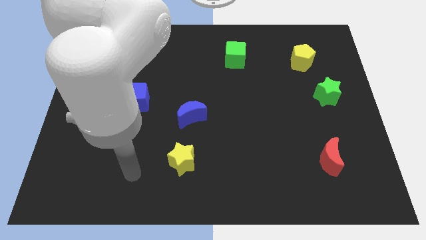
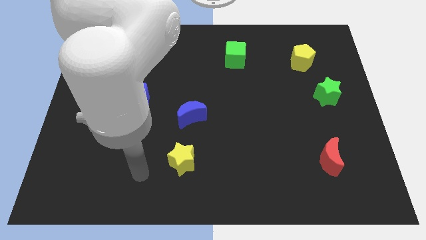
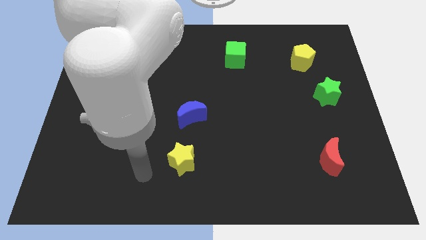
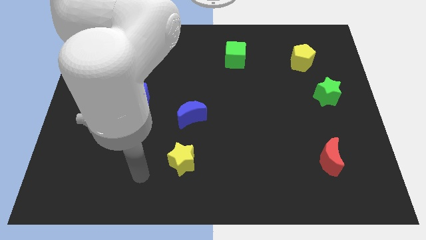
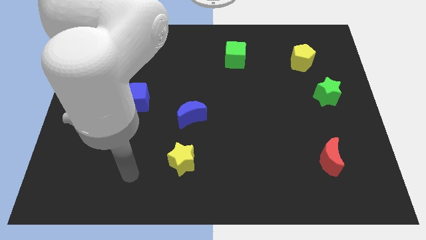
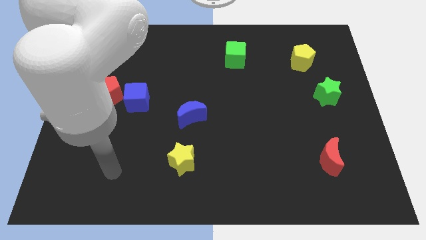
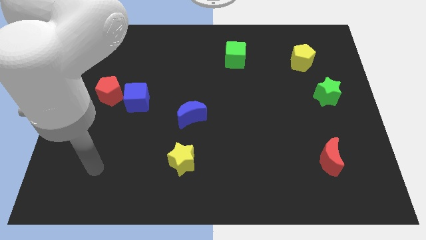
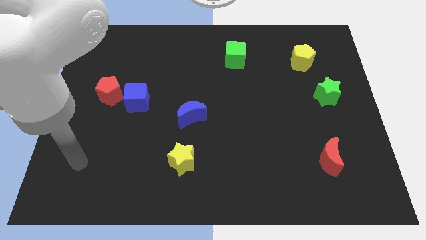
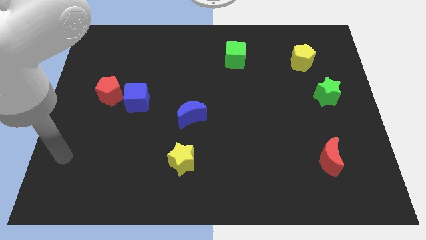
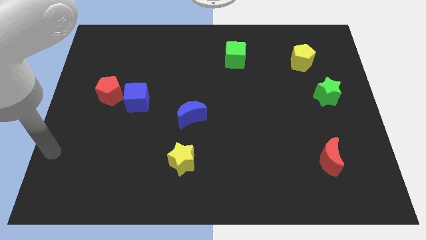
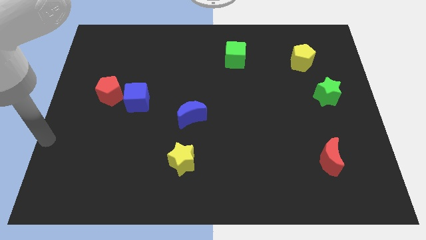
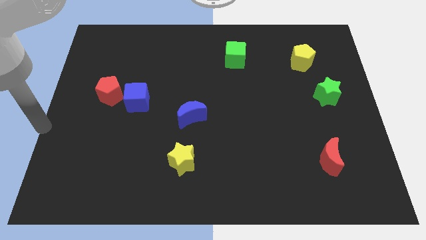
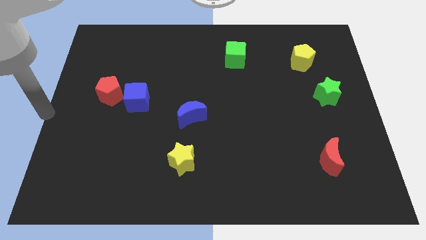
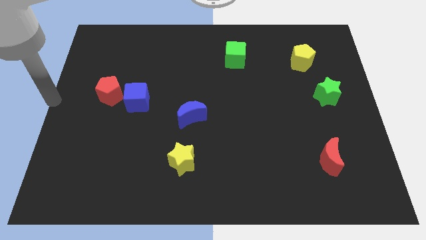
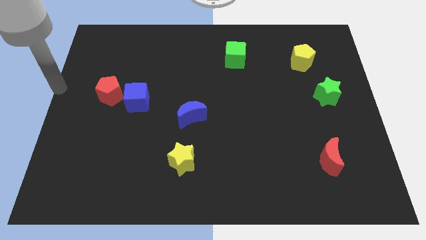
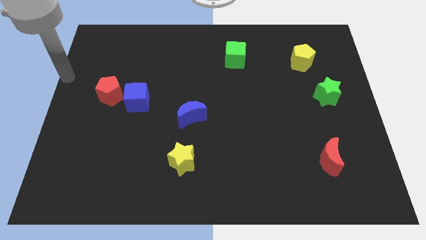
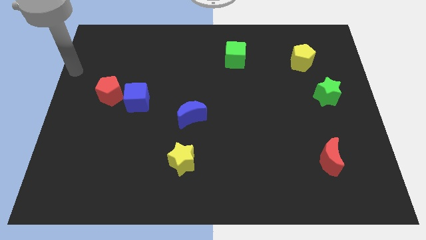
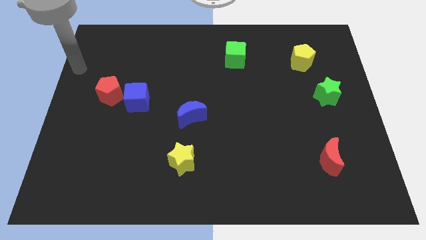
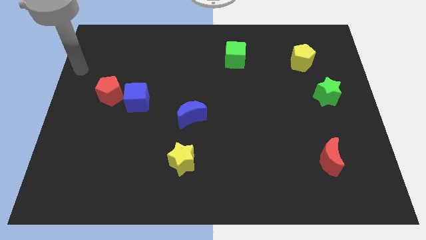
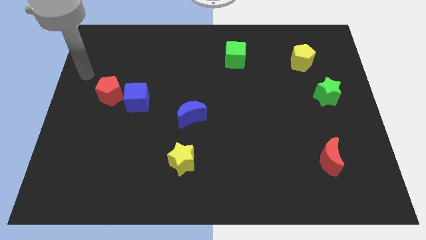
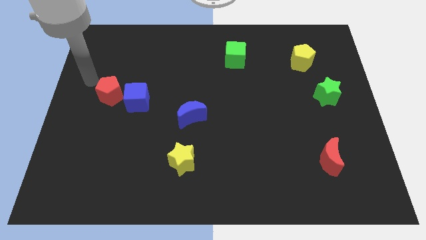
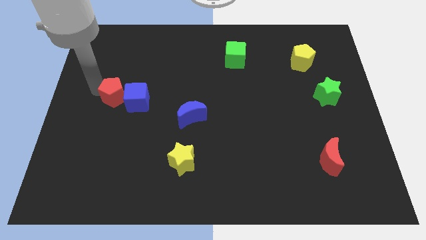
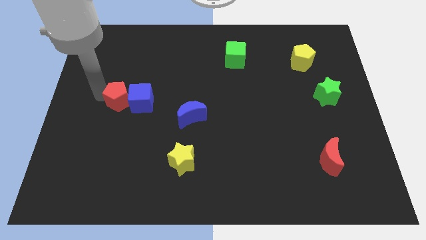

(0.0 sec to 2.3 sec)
slightly push red pentagon into the left of blue cube

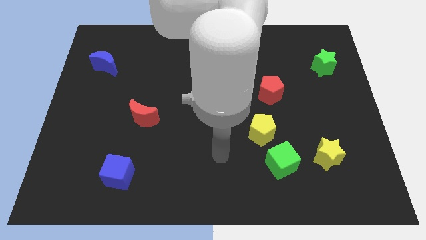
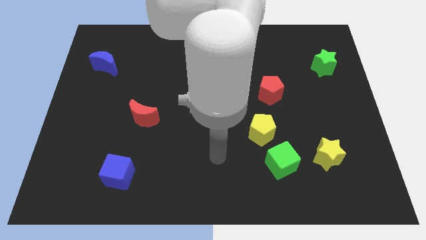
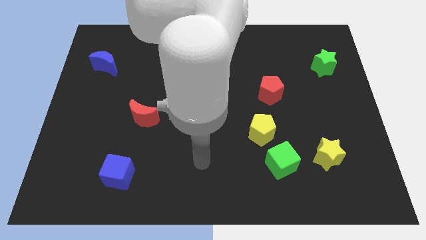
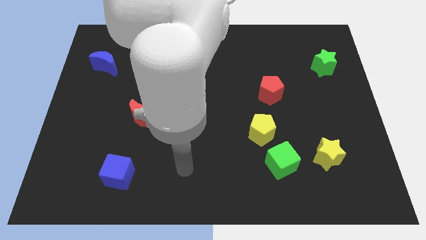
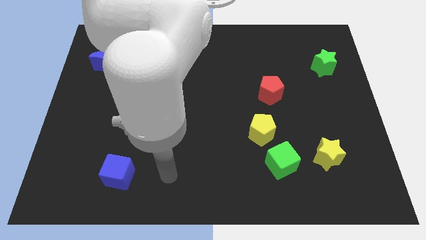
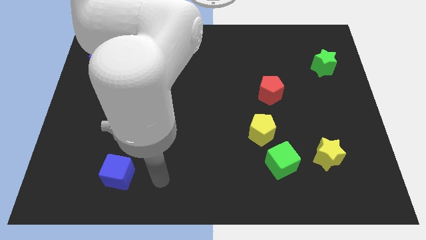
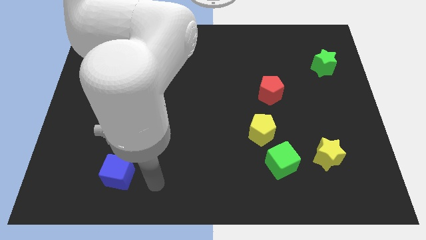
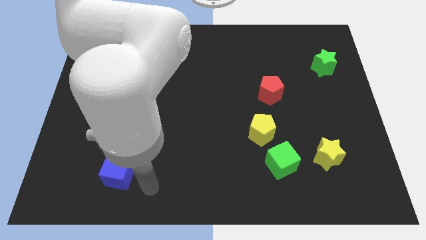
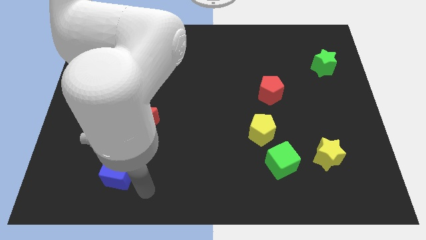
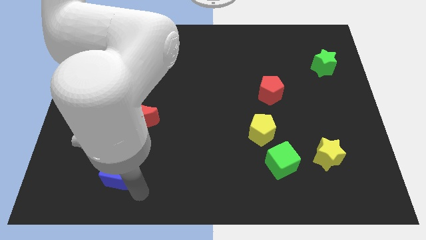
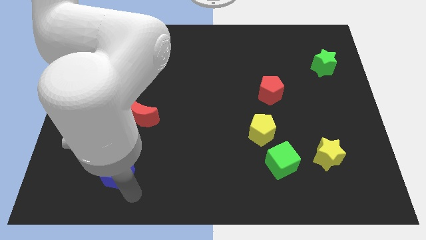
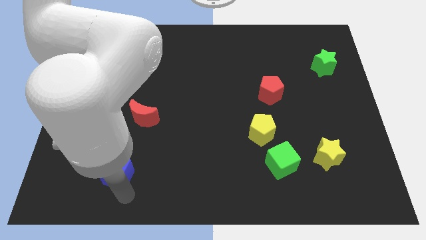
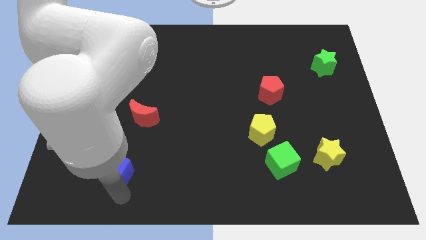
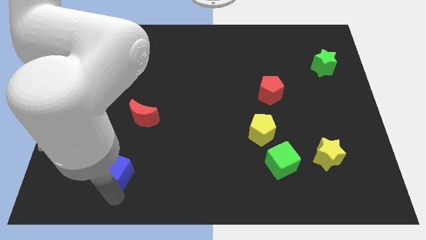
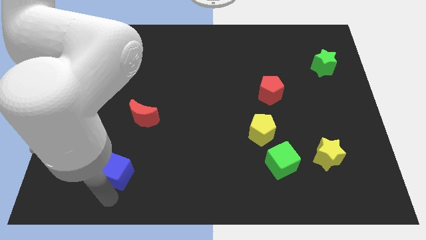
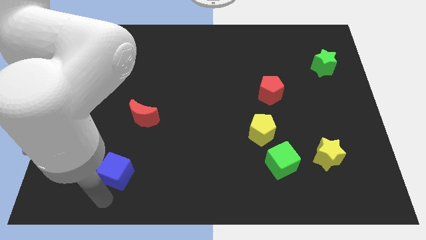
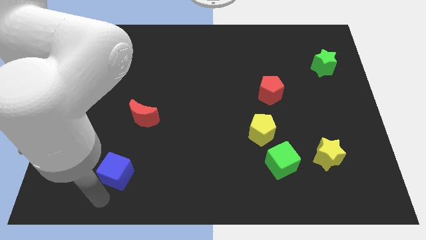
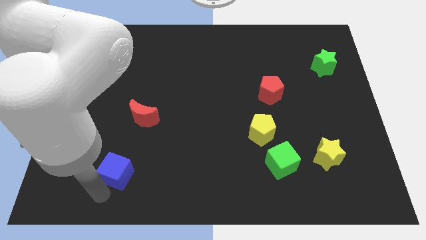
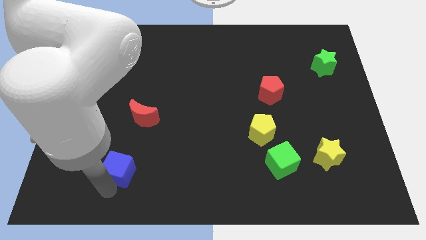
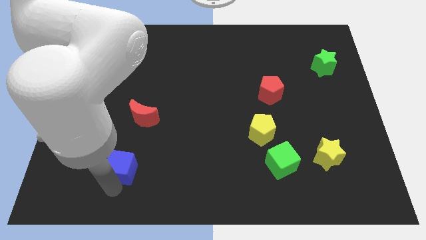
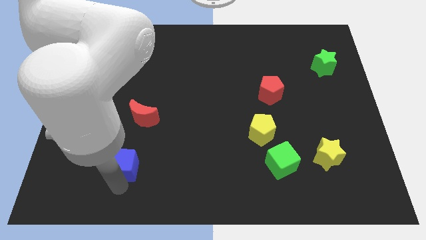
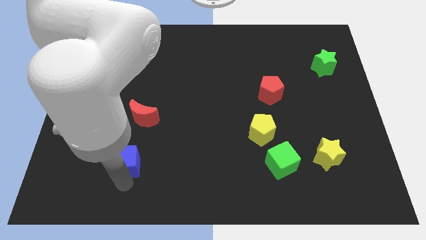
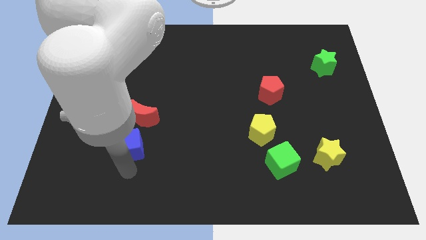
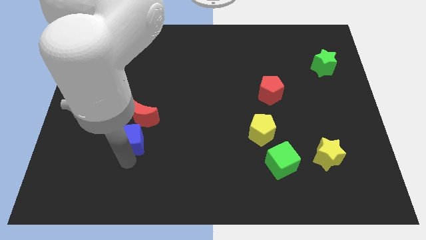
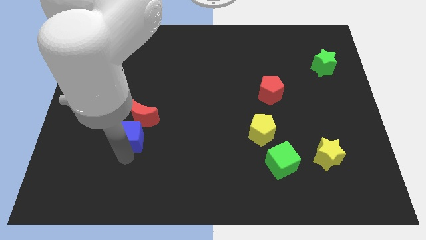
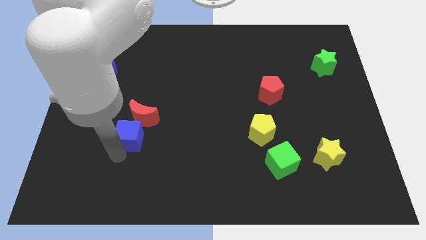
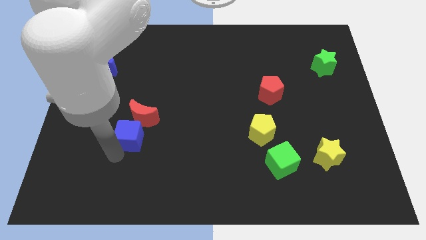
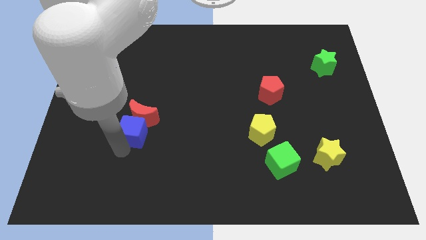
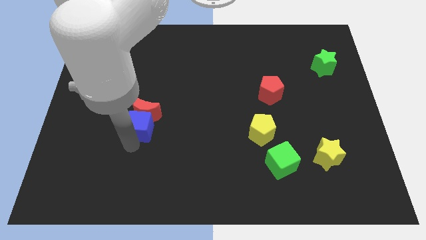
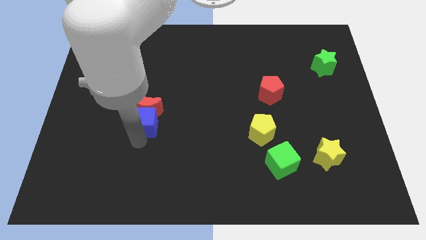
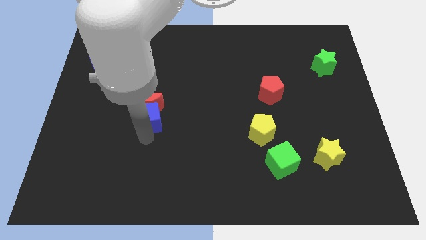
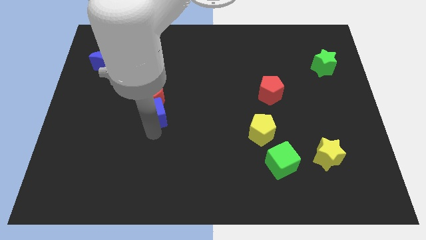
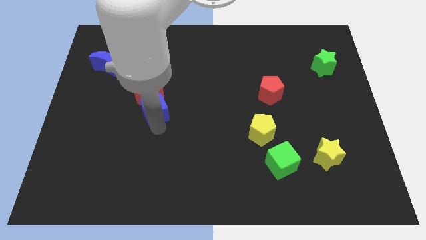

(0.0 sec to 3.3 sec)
move the blue cube into the red crescent

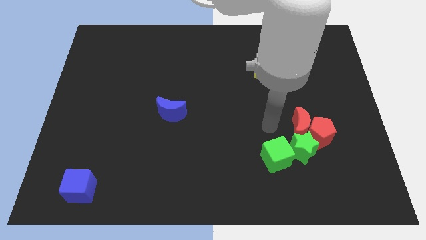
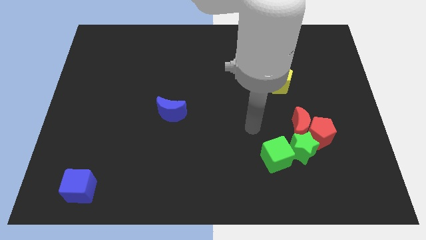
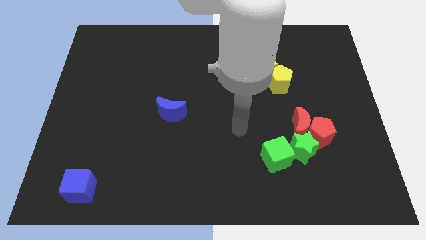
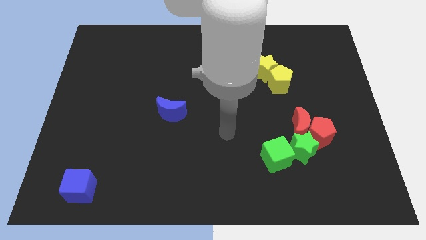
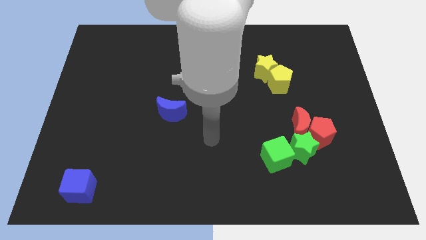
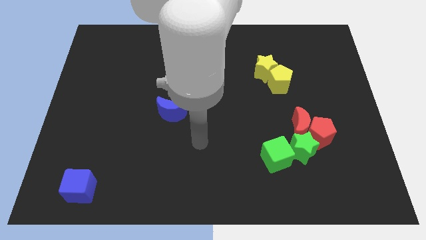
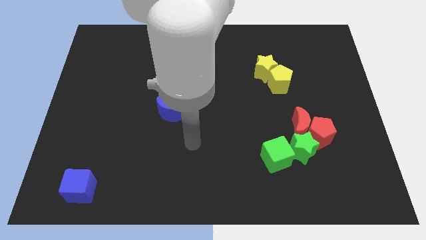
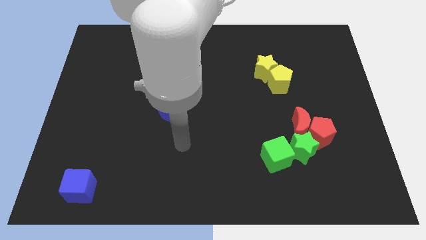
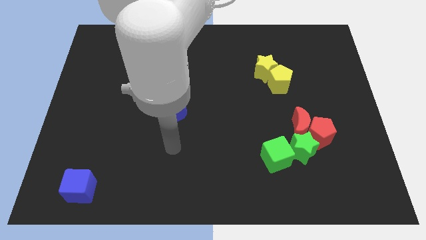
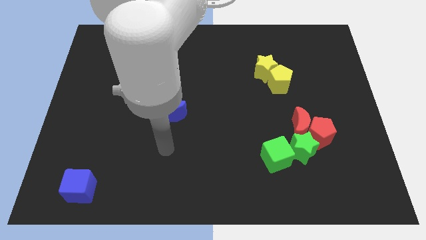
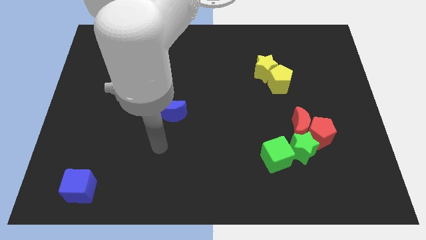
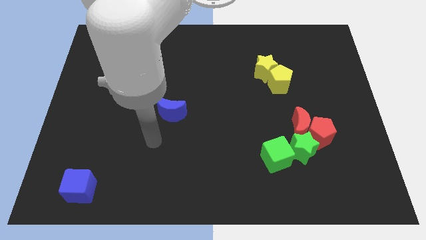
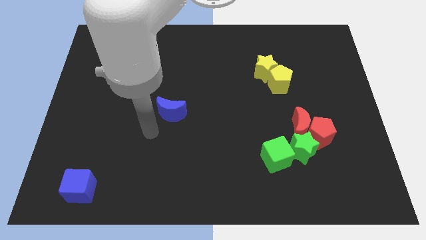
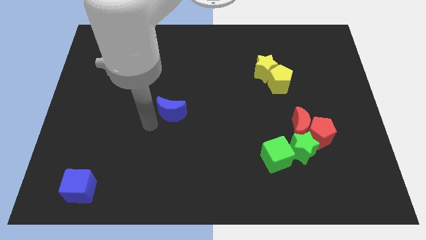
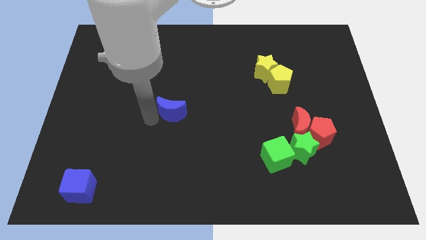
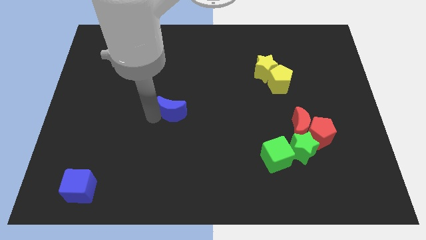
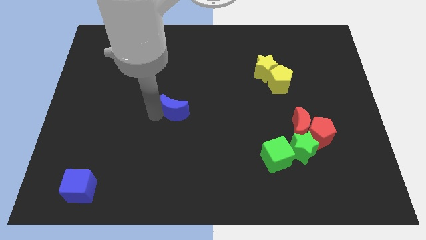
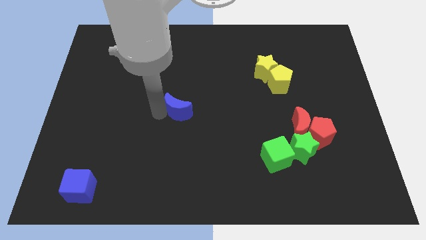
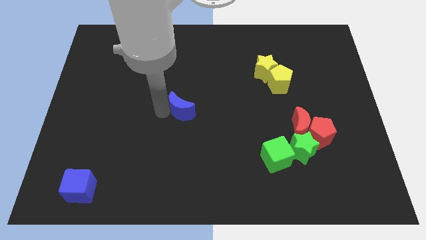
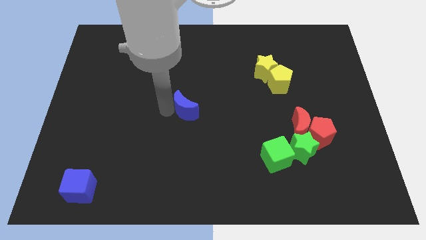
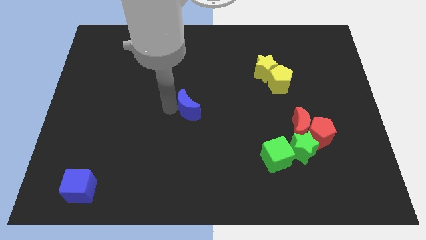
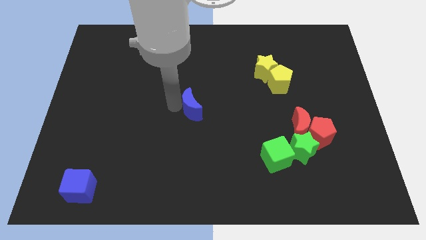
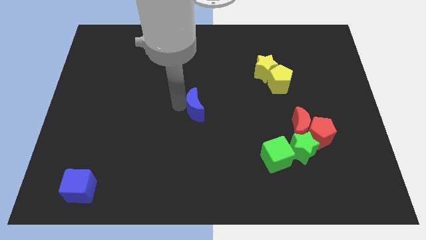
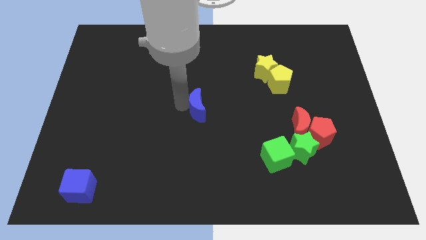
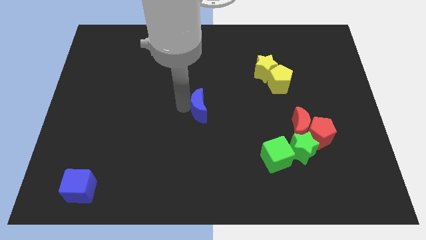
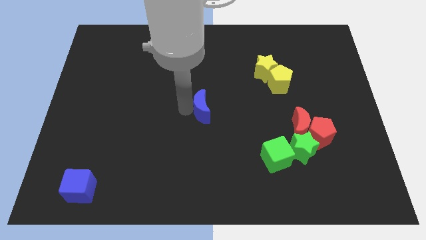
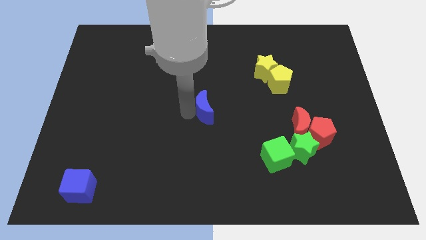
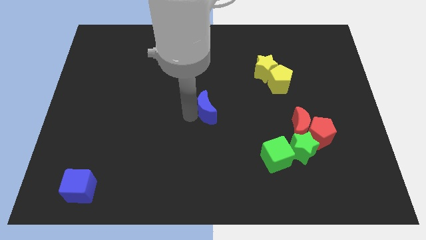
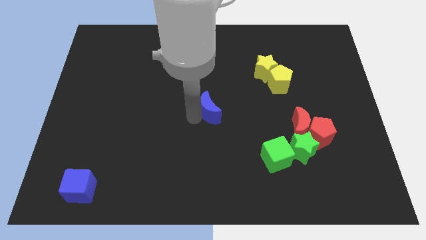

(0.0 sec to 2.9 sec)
move the blue moon to the center

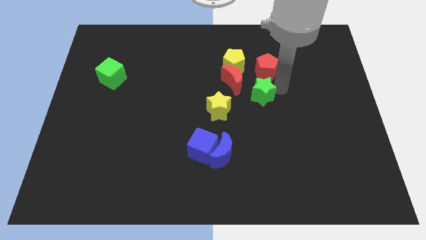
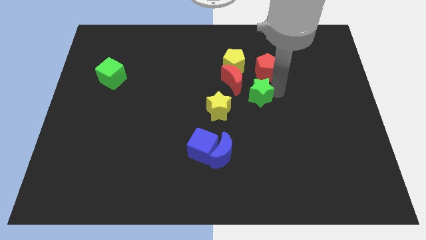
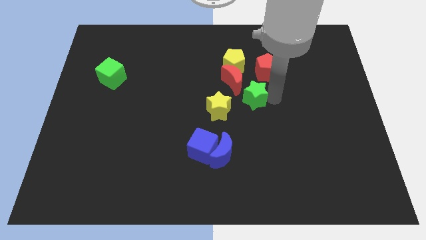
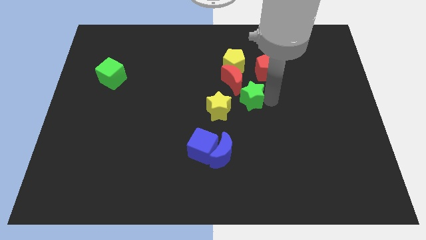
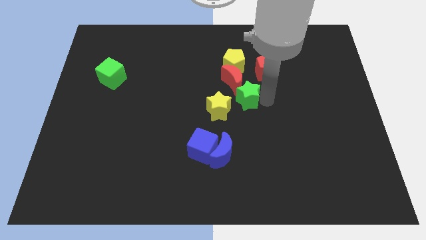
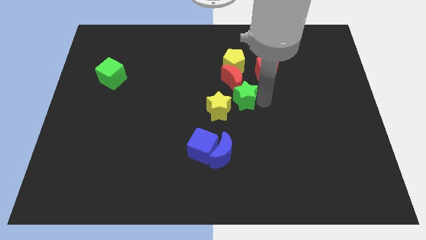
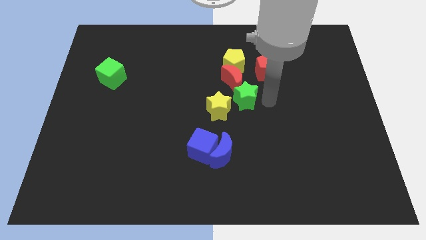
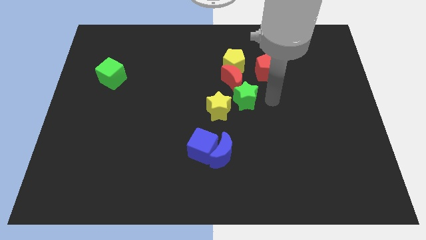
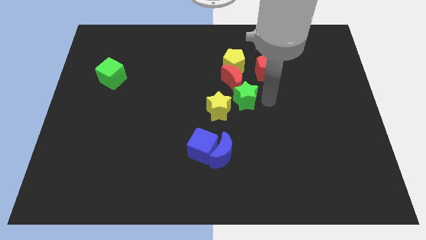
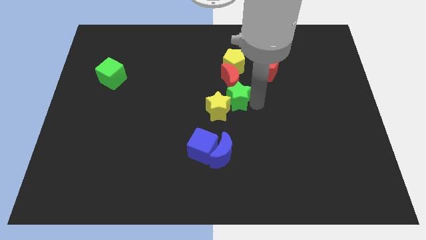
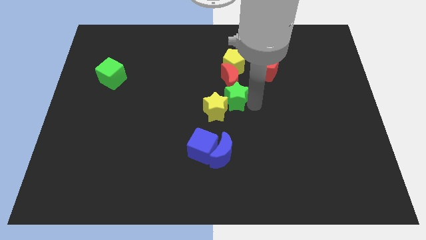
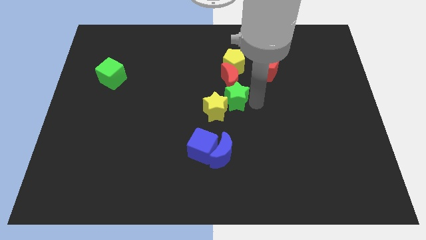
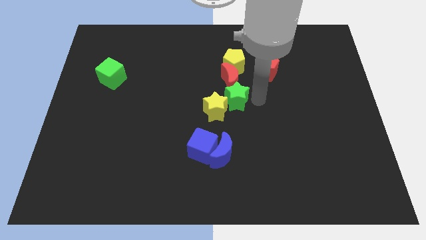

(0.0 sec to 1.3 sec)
slide the green star diagonally to the top right of the yellow star
